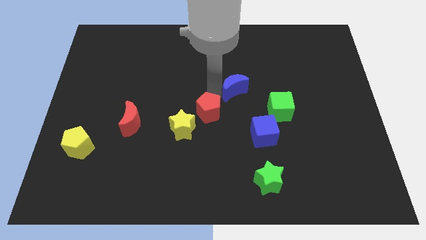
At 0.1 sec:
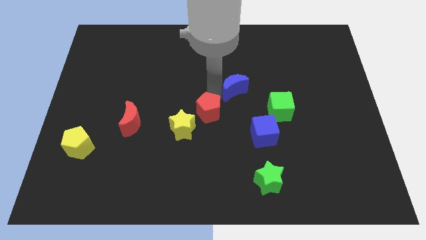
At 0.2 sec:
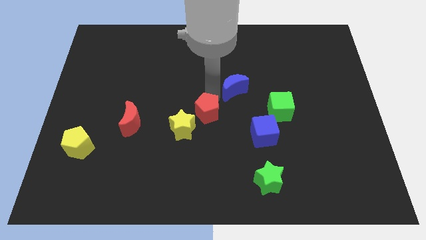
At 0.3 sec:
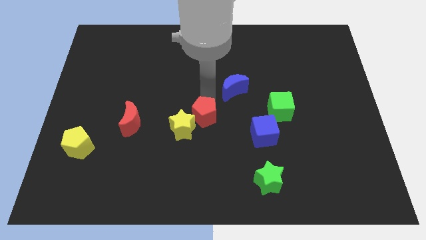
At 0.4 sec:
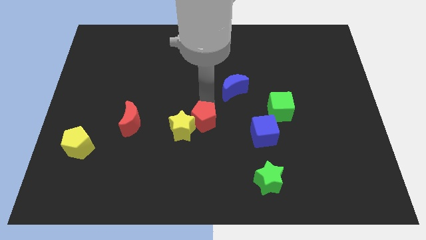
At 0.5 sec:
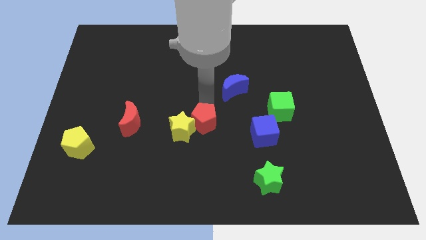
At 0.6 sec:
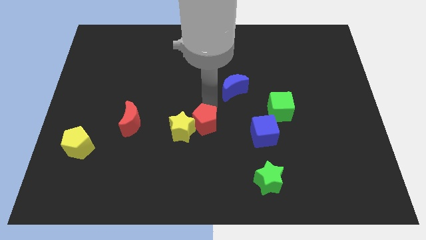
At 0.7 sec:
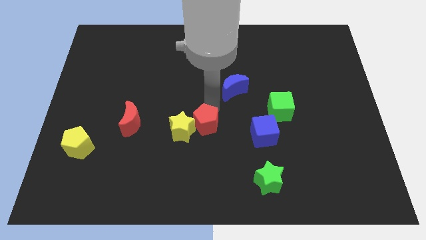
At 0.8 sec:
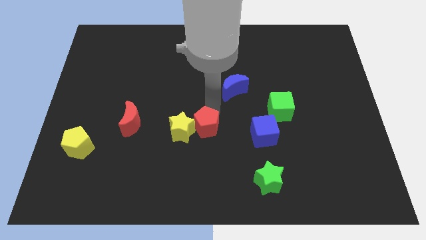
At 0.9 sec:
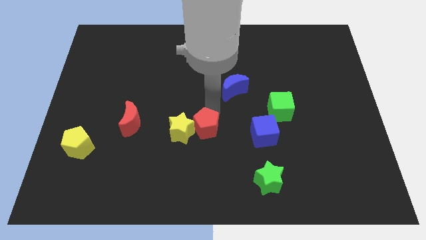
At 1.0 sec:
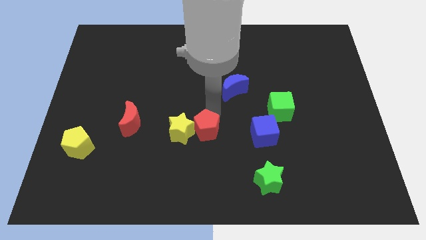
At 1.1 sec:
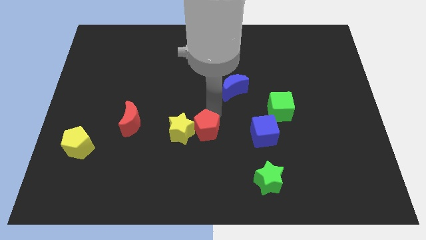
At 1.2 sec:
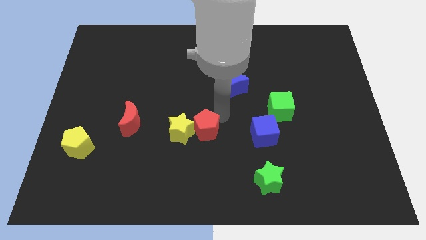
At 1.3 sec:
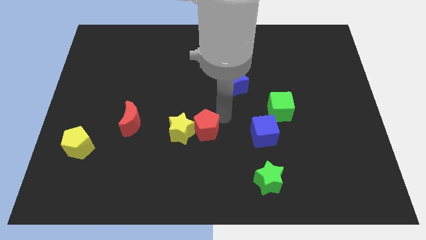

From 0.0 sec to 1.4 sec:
push the red pentagon into the yellow star

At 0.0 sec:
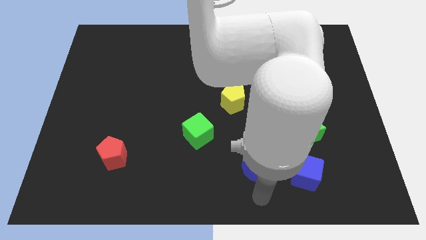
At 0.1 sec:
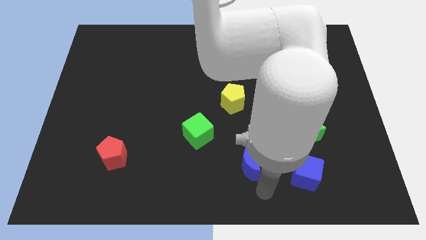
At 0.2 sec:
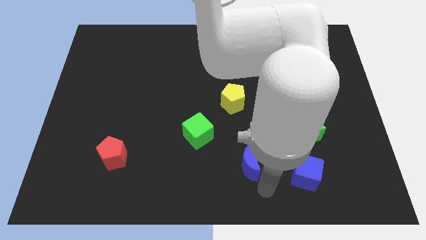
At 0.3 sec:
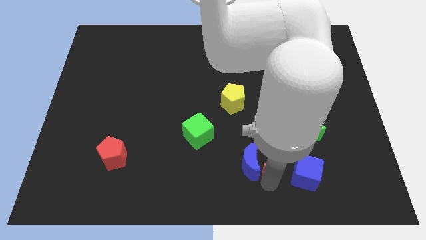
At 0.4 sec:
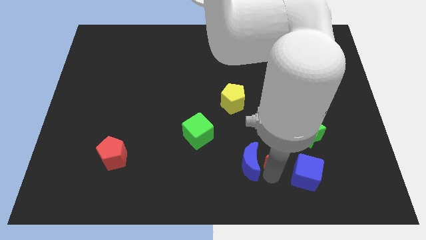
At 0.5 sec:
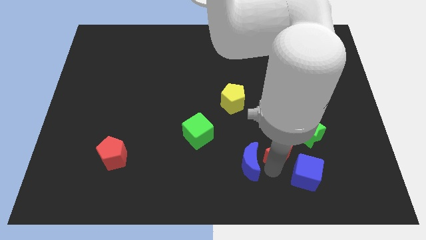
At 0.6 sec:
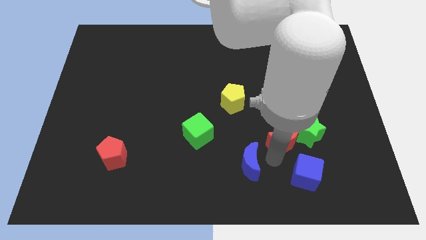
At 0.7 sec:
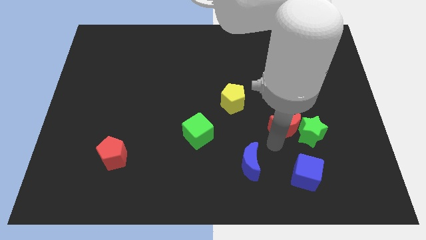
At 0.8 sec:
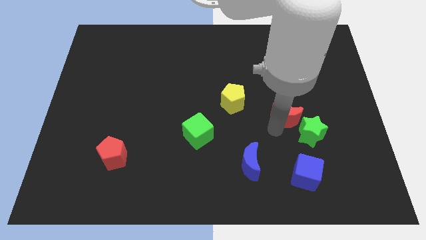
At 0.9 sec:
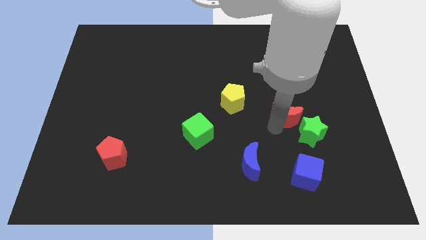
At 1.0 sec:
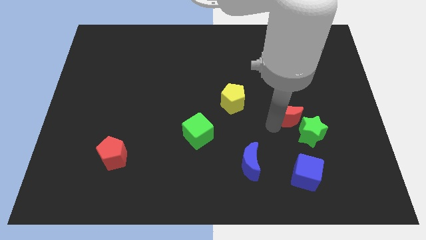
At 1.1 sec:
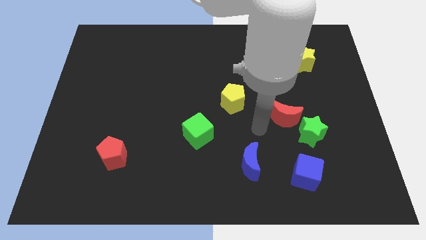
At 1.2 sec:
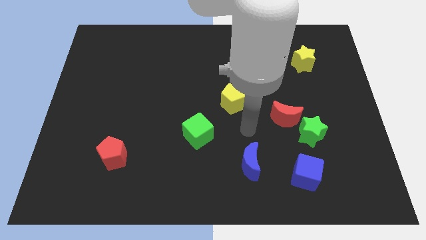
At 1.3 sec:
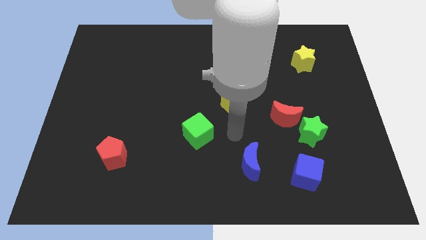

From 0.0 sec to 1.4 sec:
put the red moon diagonally top right to the blue crescent

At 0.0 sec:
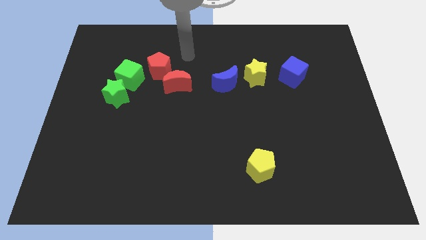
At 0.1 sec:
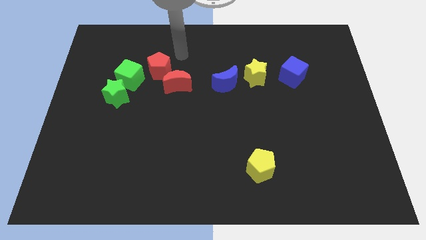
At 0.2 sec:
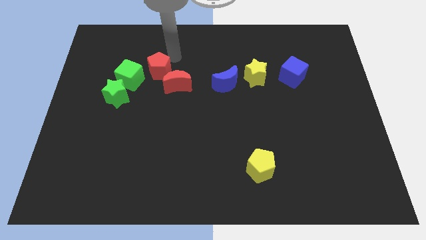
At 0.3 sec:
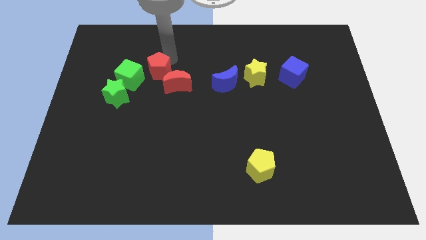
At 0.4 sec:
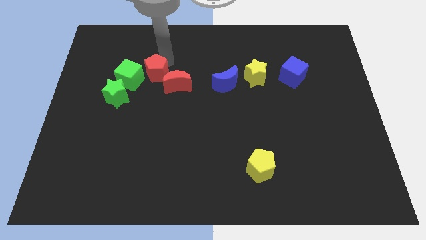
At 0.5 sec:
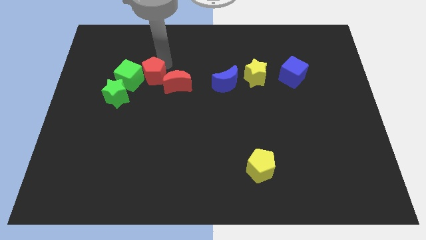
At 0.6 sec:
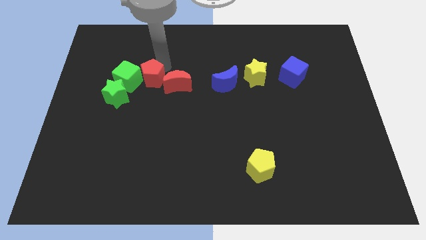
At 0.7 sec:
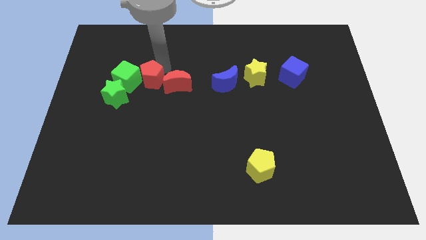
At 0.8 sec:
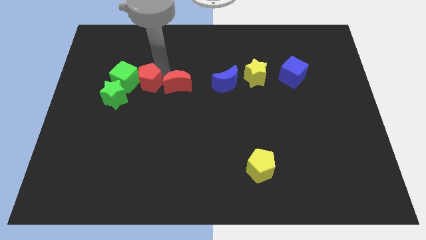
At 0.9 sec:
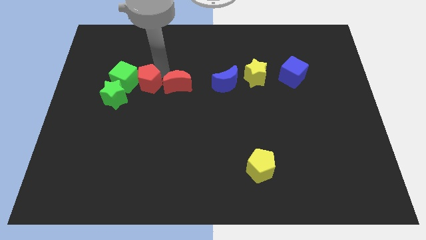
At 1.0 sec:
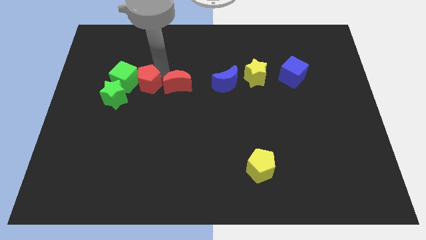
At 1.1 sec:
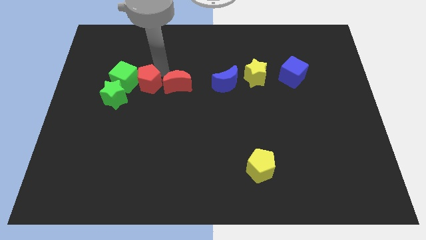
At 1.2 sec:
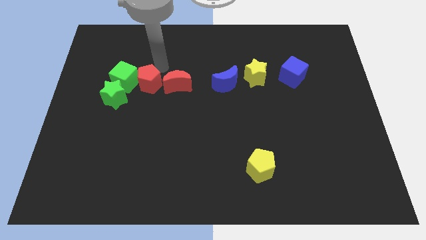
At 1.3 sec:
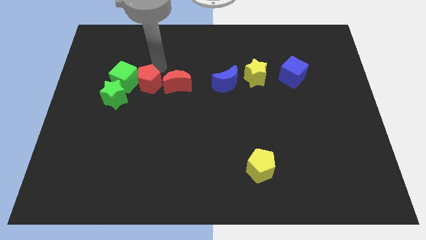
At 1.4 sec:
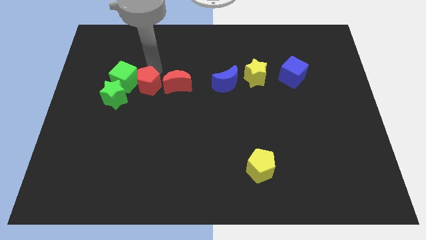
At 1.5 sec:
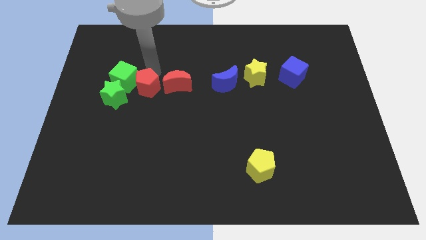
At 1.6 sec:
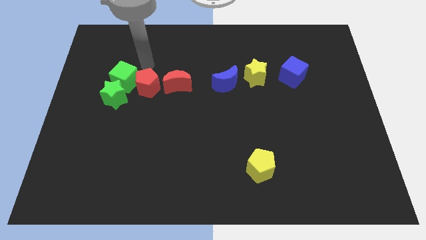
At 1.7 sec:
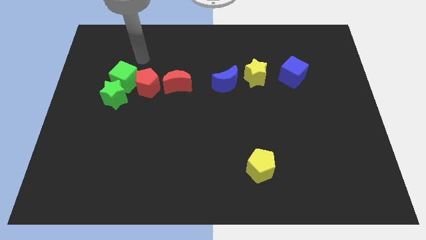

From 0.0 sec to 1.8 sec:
slightly push the red pentagon downwards

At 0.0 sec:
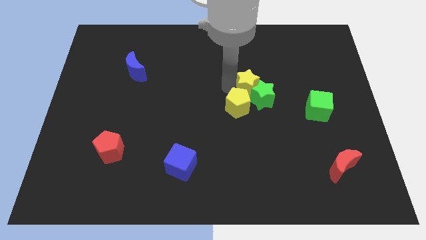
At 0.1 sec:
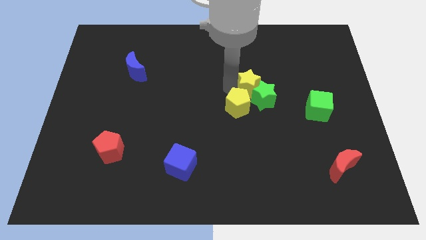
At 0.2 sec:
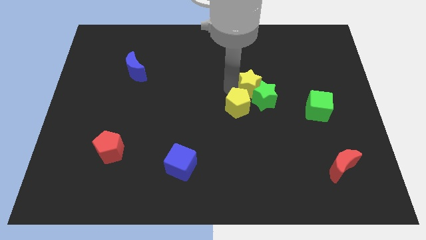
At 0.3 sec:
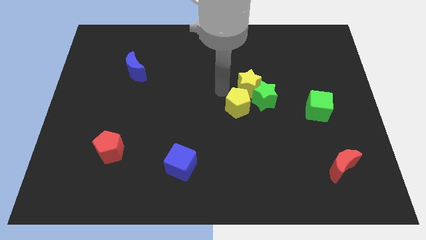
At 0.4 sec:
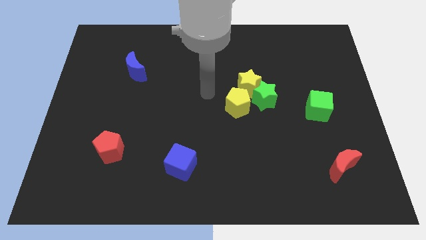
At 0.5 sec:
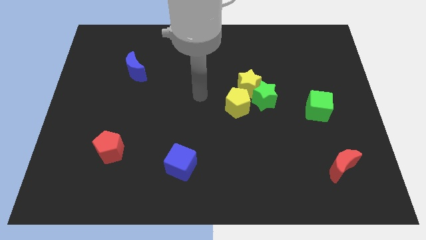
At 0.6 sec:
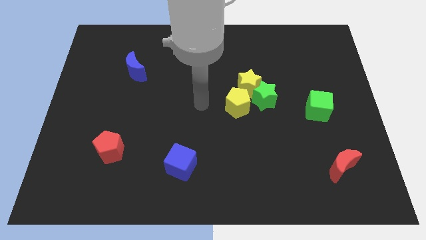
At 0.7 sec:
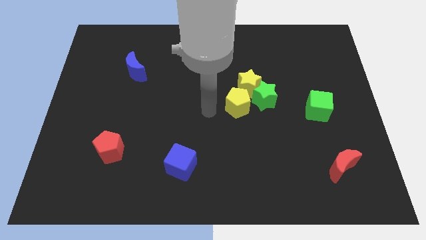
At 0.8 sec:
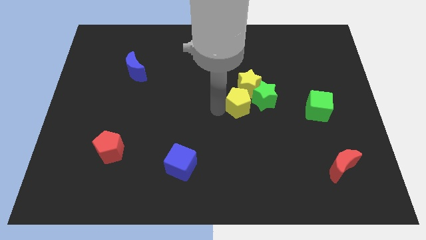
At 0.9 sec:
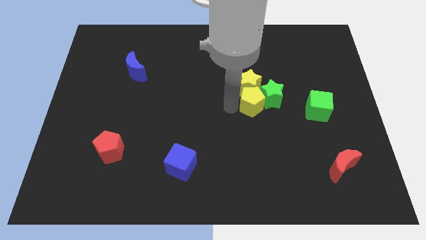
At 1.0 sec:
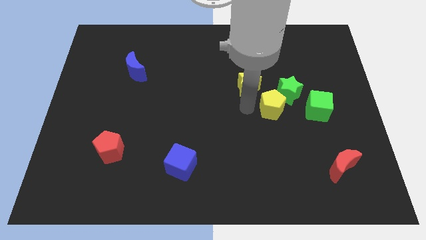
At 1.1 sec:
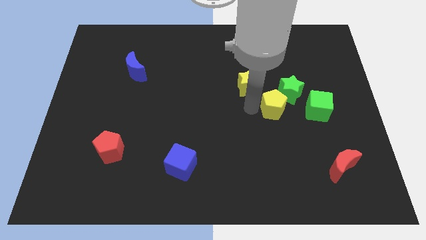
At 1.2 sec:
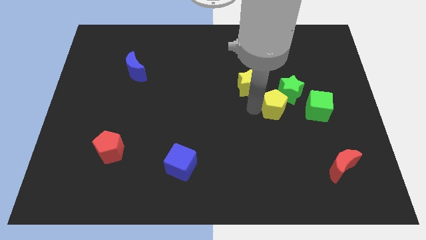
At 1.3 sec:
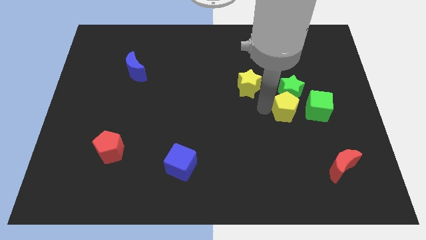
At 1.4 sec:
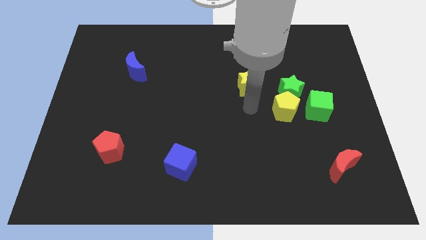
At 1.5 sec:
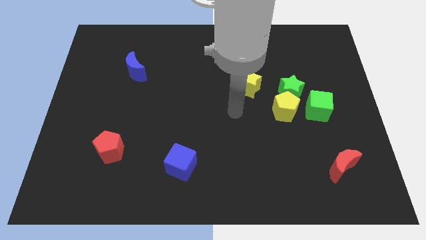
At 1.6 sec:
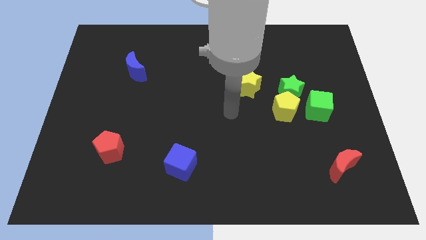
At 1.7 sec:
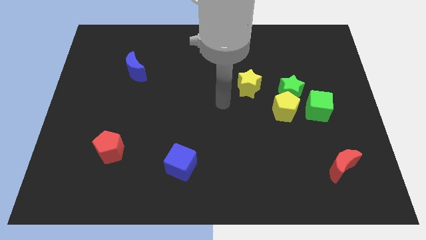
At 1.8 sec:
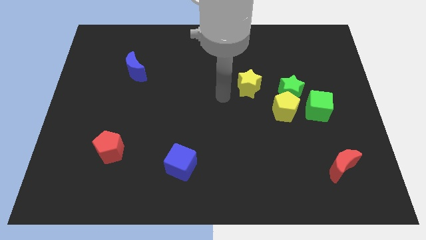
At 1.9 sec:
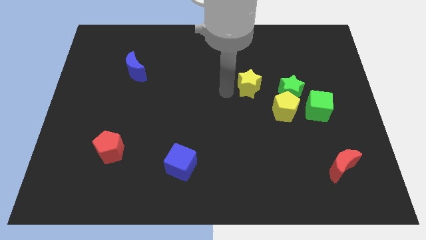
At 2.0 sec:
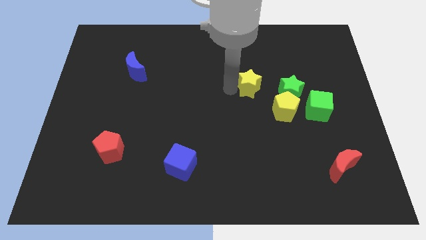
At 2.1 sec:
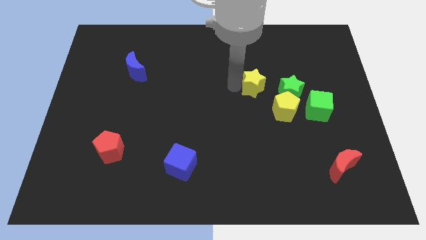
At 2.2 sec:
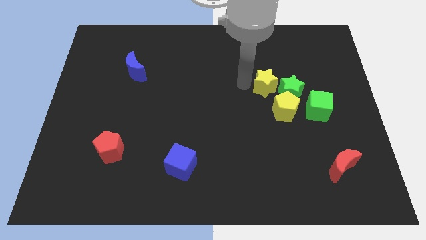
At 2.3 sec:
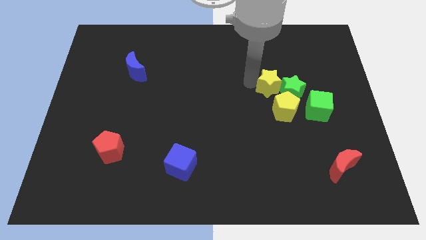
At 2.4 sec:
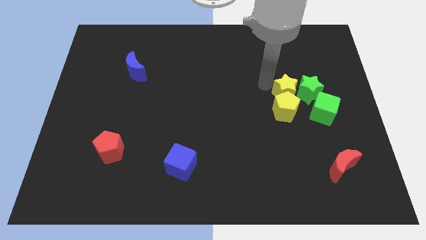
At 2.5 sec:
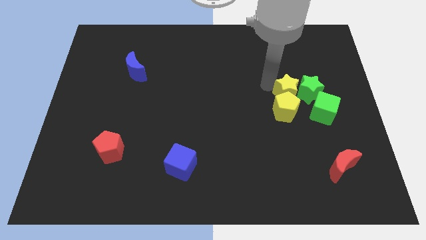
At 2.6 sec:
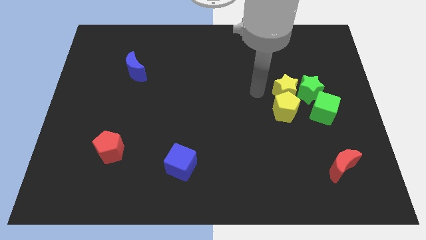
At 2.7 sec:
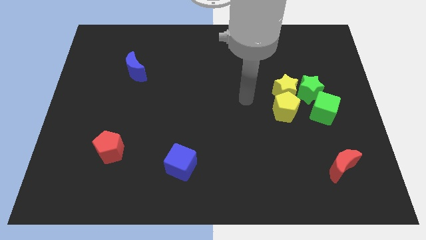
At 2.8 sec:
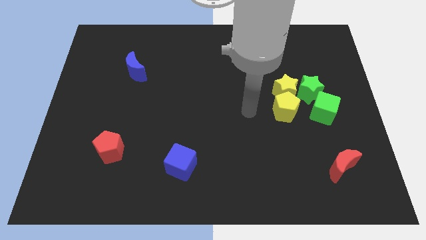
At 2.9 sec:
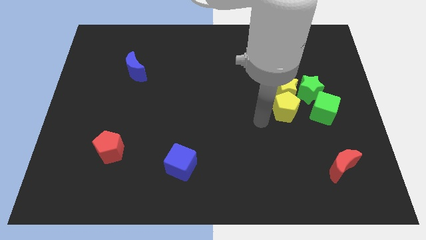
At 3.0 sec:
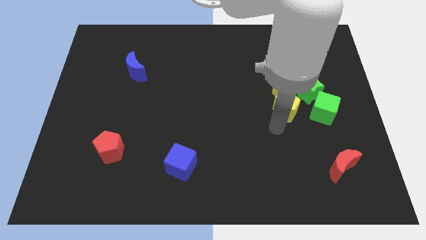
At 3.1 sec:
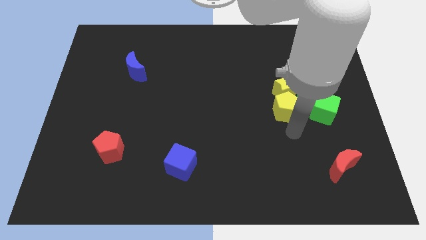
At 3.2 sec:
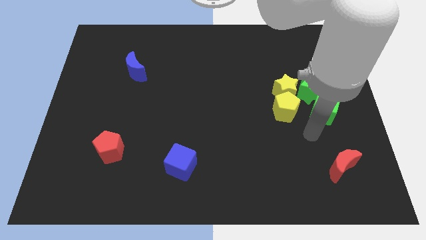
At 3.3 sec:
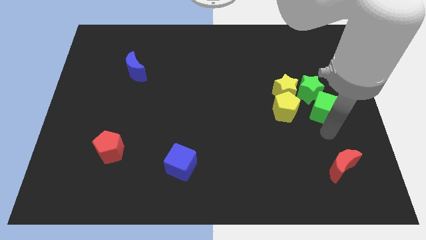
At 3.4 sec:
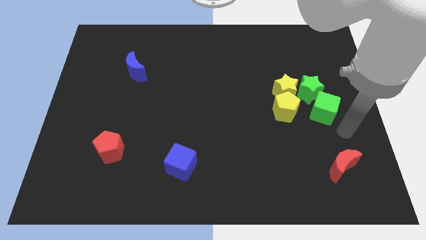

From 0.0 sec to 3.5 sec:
push the group of blocks into green cube

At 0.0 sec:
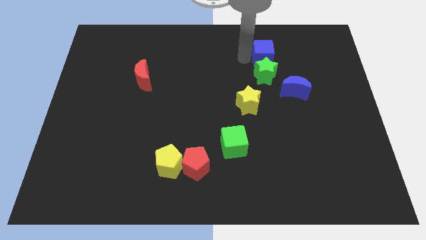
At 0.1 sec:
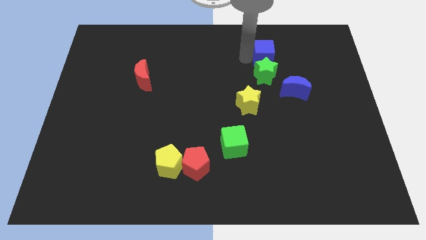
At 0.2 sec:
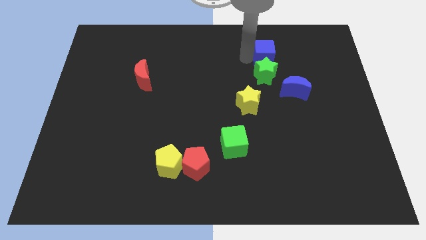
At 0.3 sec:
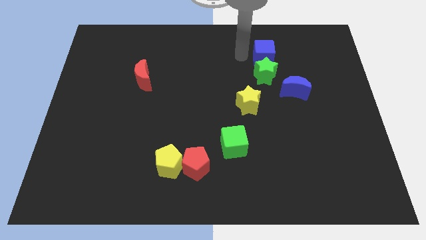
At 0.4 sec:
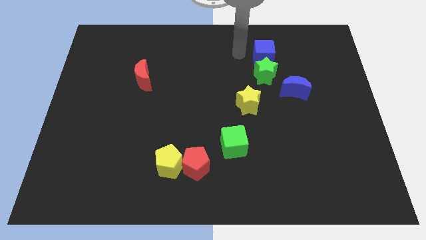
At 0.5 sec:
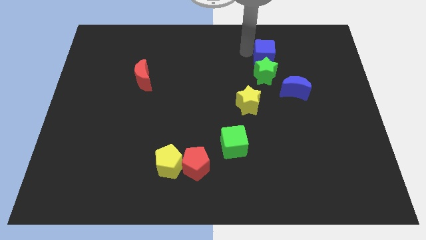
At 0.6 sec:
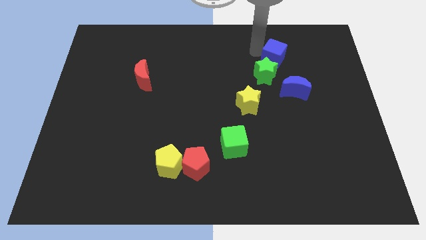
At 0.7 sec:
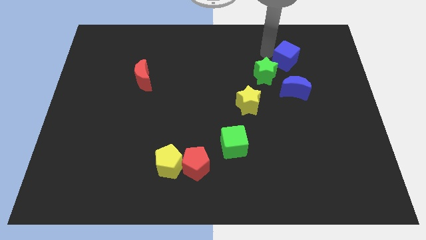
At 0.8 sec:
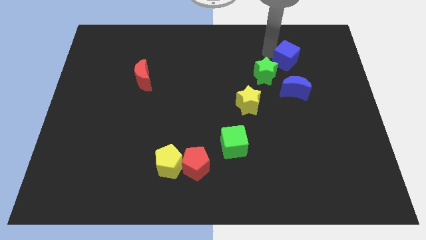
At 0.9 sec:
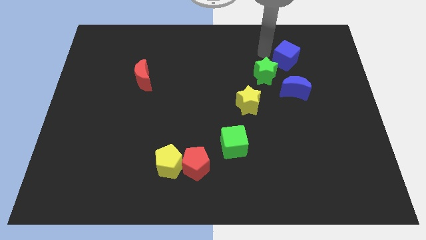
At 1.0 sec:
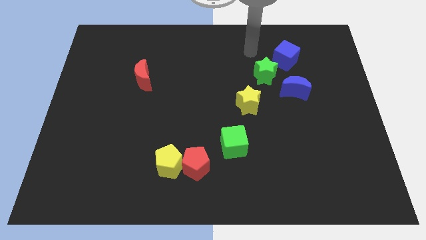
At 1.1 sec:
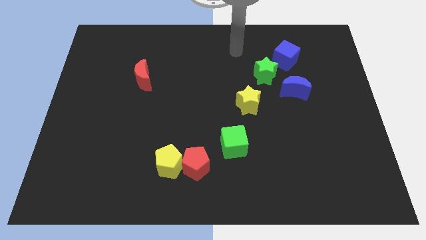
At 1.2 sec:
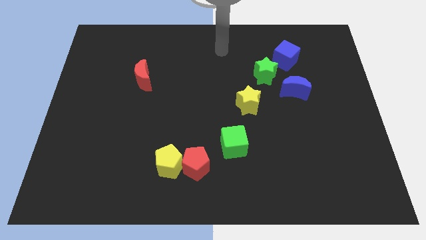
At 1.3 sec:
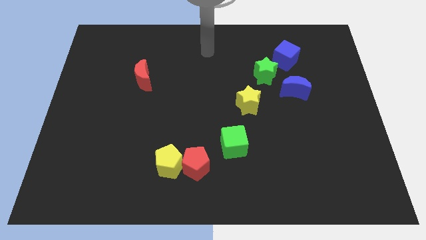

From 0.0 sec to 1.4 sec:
slide the blue cube to the top right side of the green star
